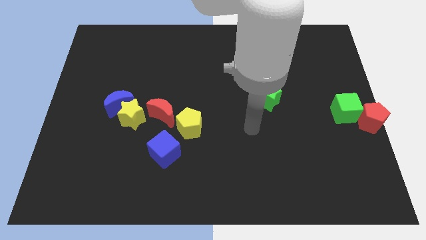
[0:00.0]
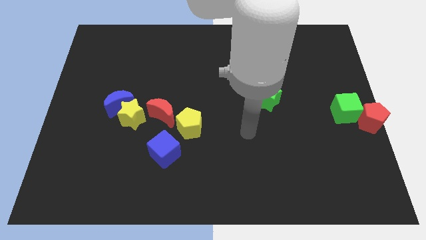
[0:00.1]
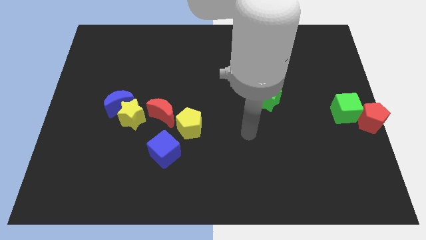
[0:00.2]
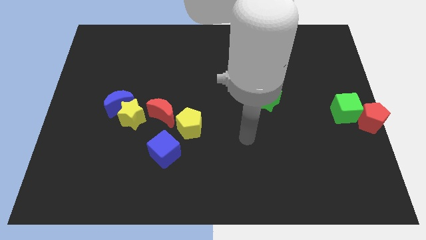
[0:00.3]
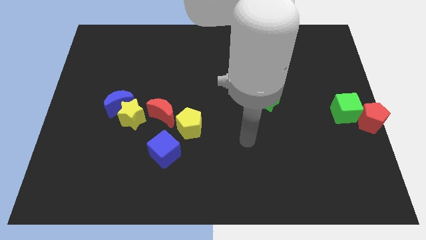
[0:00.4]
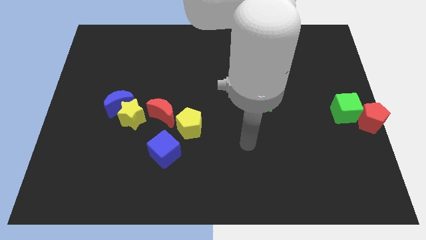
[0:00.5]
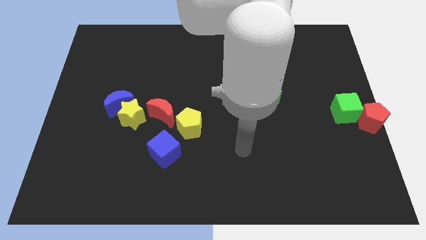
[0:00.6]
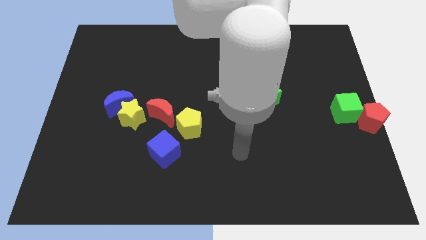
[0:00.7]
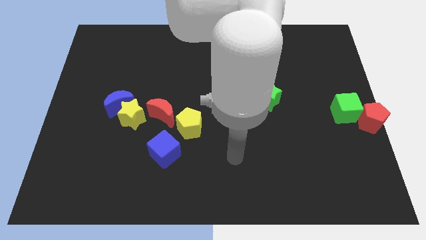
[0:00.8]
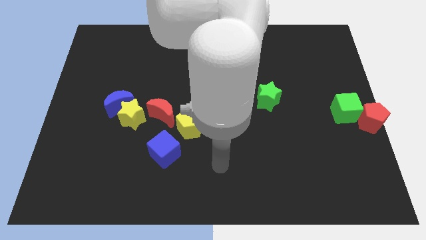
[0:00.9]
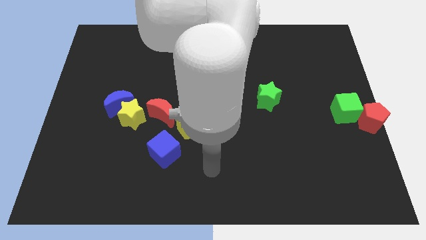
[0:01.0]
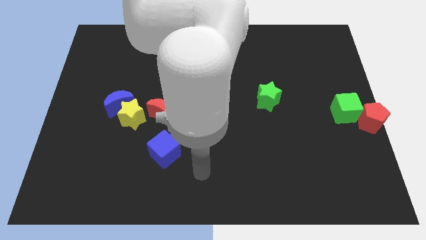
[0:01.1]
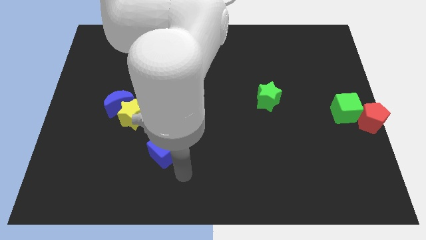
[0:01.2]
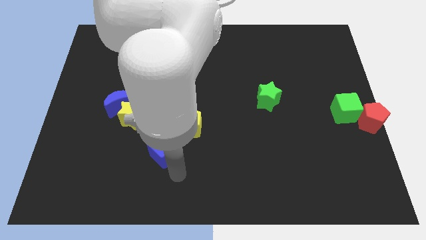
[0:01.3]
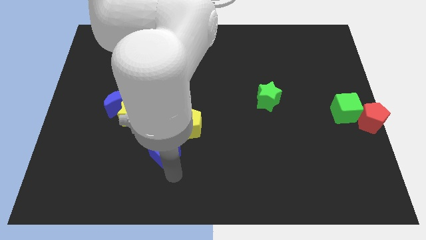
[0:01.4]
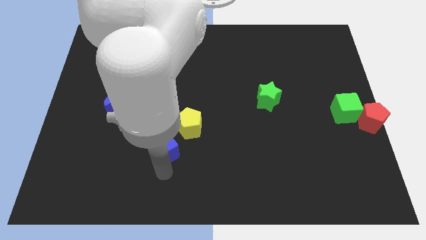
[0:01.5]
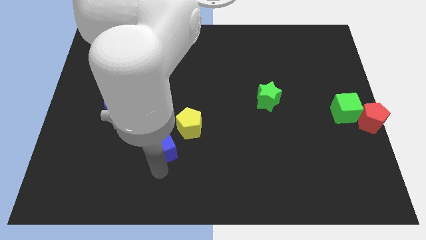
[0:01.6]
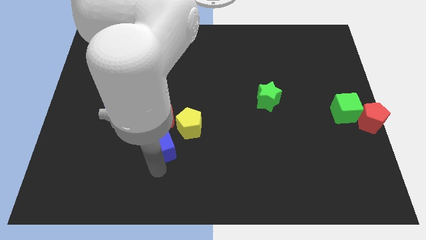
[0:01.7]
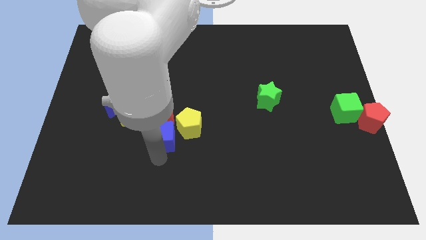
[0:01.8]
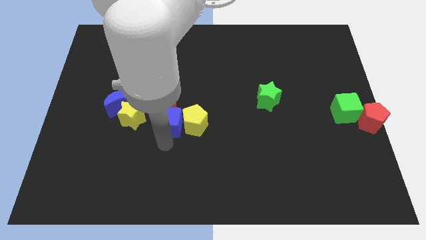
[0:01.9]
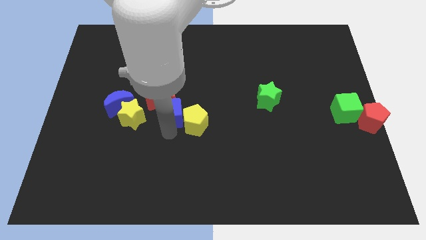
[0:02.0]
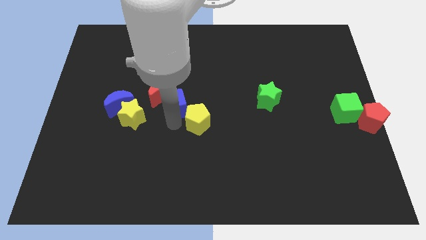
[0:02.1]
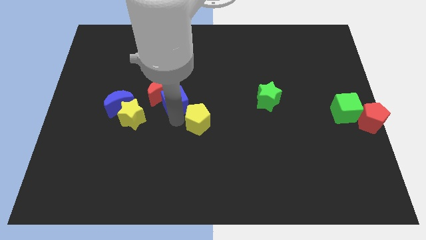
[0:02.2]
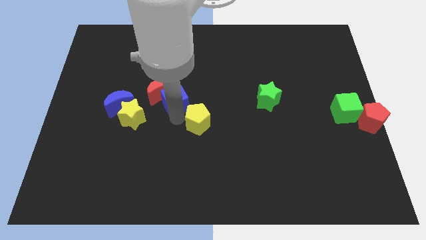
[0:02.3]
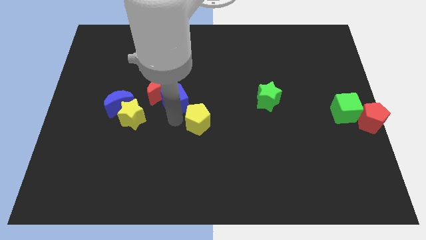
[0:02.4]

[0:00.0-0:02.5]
push the blue cube into the red crescent

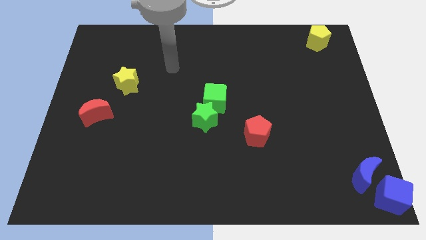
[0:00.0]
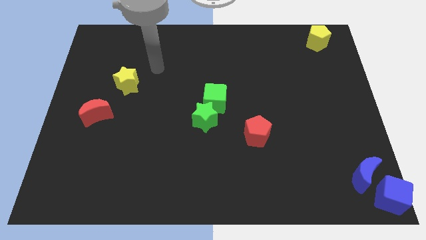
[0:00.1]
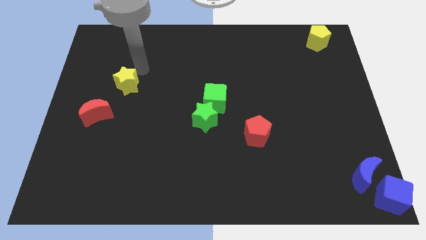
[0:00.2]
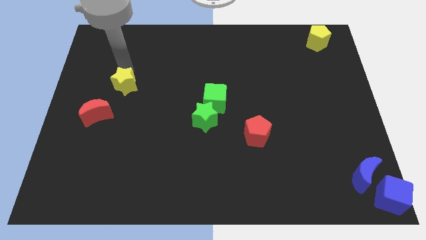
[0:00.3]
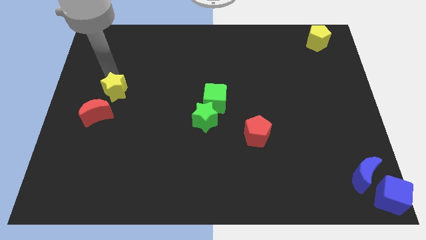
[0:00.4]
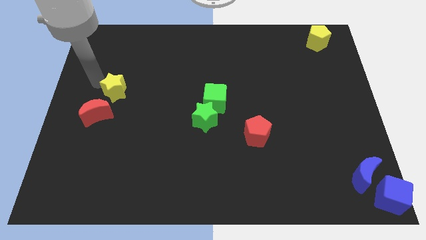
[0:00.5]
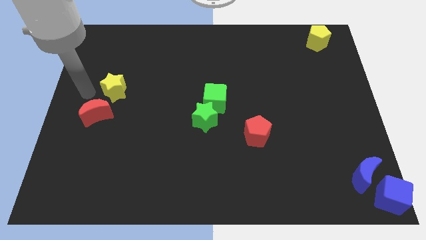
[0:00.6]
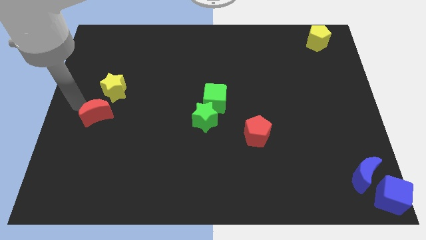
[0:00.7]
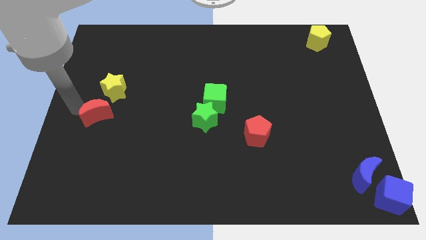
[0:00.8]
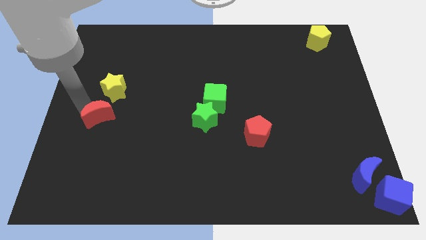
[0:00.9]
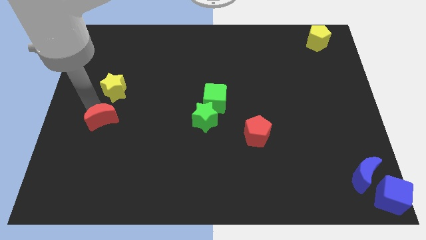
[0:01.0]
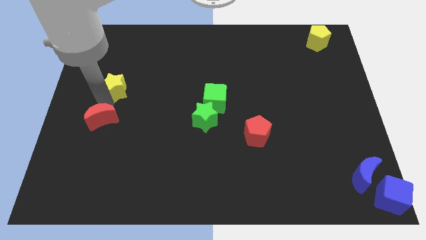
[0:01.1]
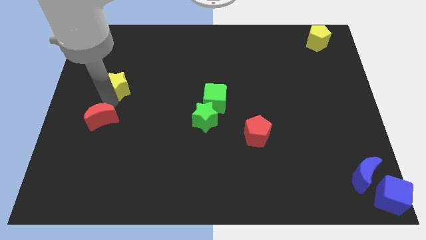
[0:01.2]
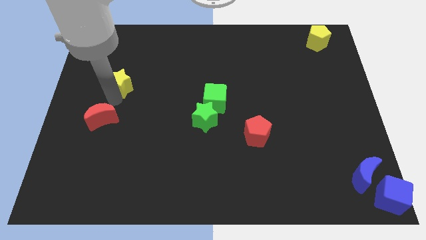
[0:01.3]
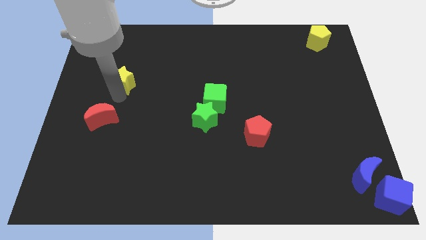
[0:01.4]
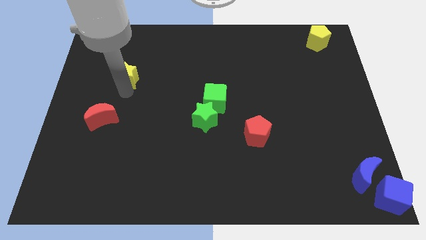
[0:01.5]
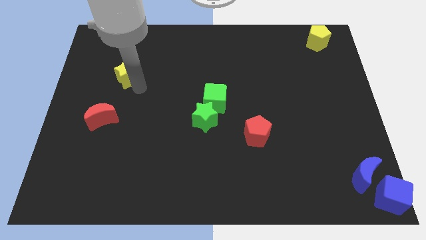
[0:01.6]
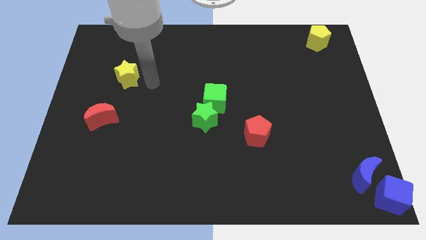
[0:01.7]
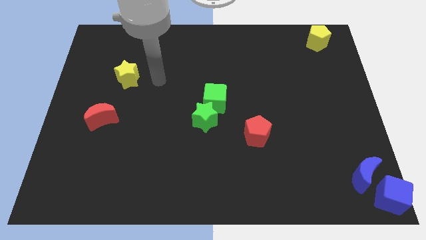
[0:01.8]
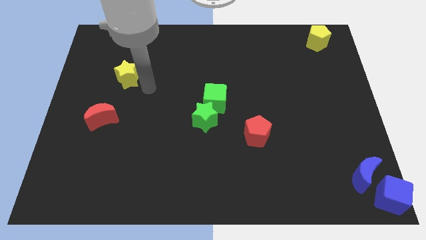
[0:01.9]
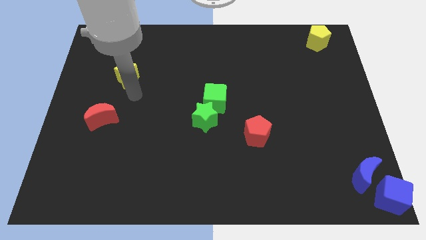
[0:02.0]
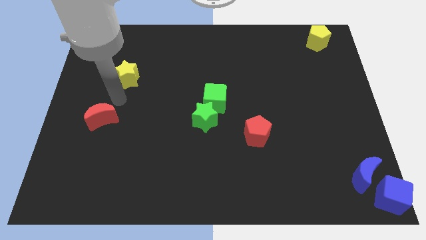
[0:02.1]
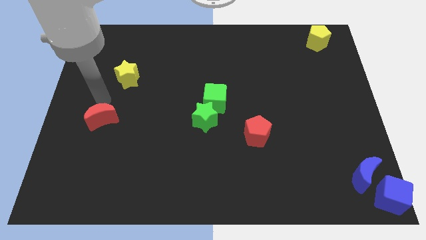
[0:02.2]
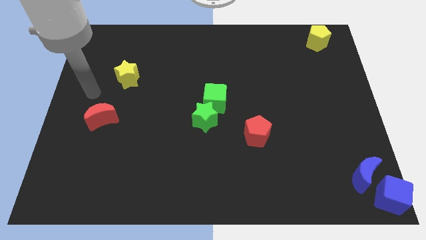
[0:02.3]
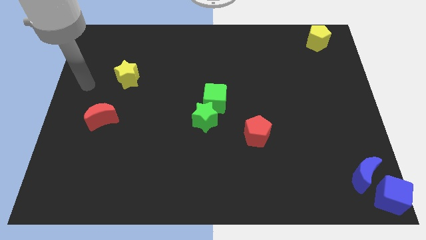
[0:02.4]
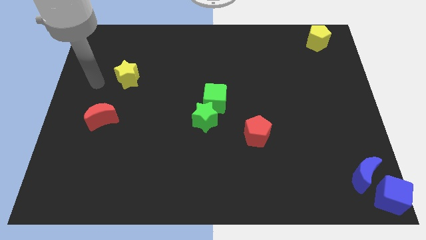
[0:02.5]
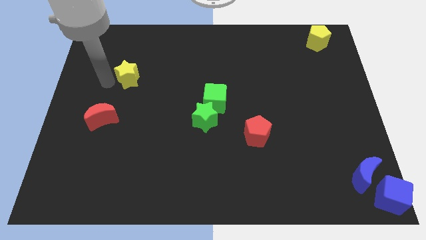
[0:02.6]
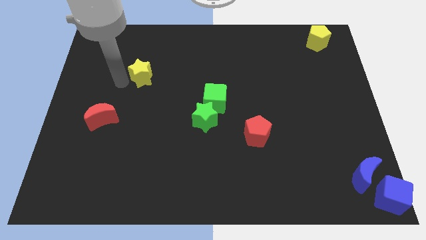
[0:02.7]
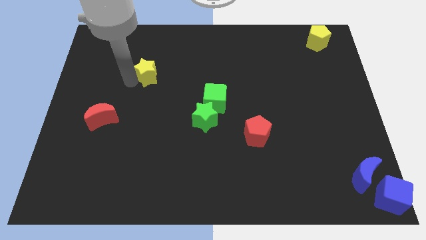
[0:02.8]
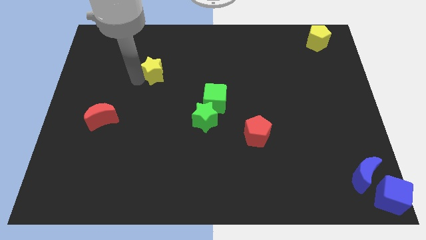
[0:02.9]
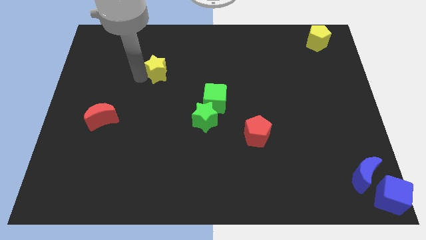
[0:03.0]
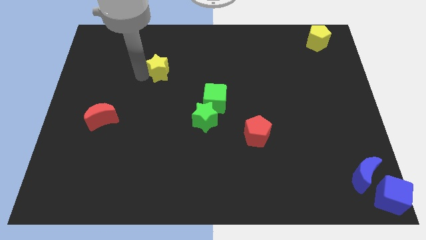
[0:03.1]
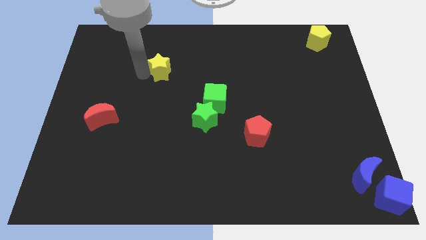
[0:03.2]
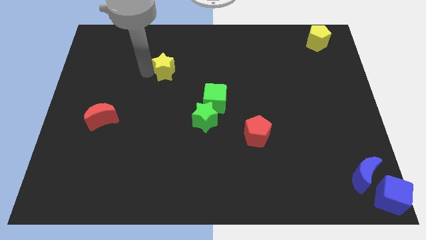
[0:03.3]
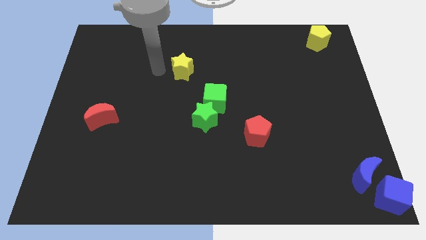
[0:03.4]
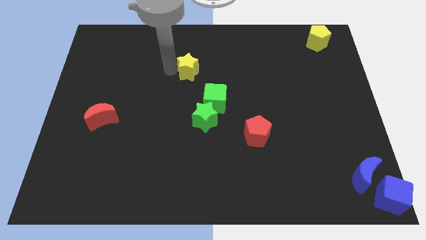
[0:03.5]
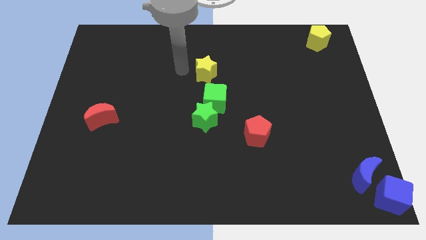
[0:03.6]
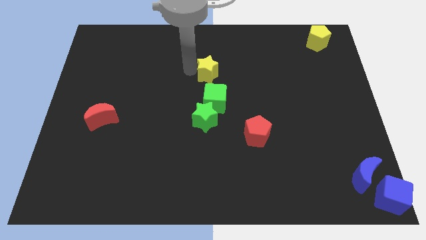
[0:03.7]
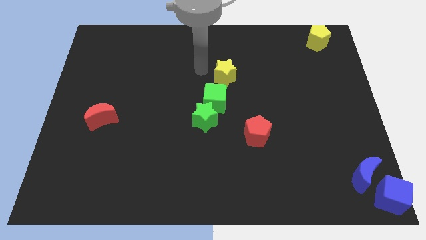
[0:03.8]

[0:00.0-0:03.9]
move yellow star above green cube

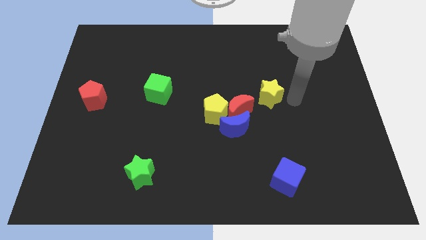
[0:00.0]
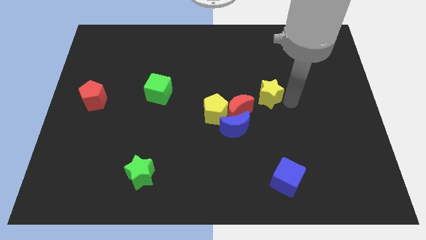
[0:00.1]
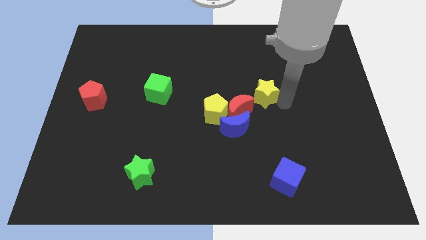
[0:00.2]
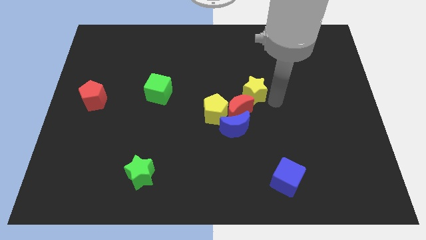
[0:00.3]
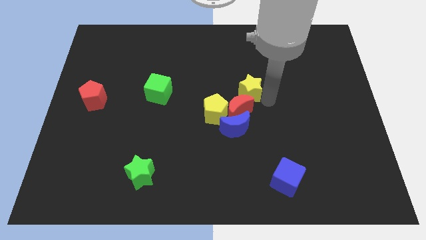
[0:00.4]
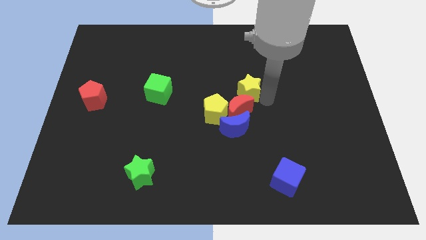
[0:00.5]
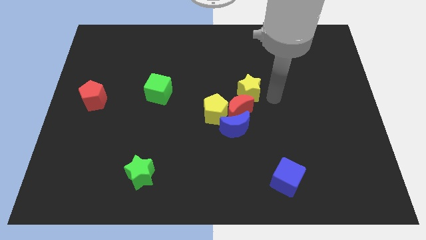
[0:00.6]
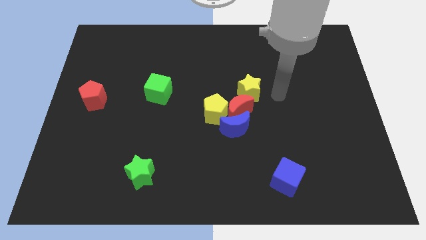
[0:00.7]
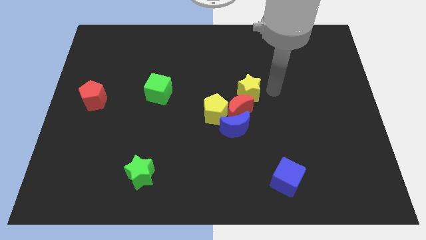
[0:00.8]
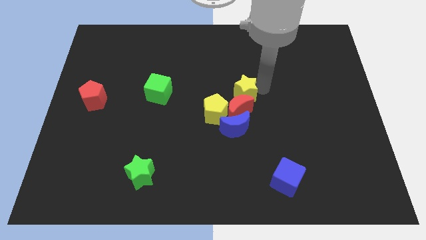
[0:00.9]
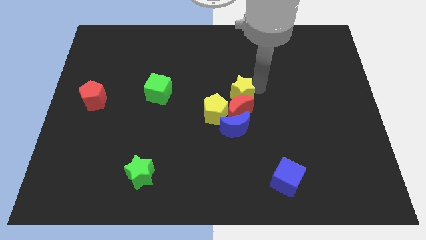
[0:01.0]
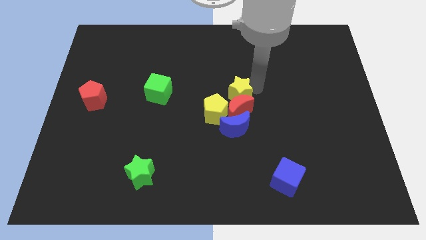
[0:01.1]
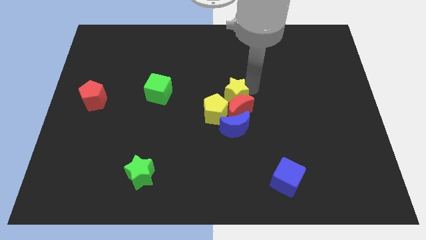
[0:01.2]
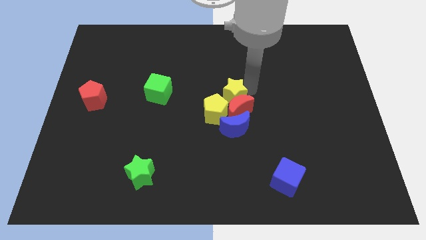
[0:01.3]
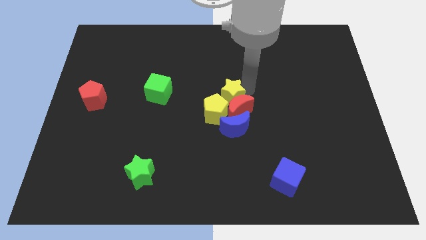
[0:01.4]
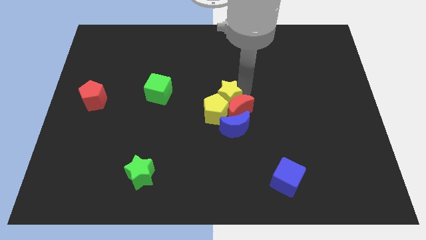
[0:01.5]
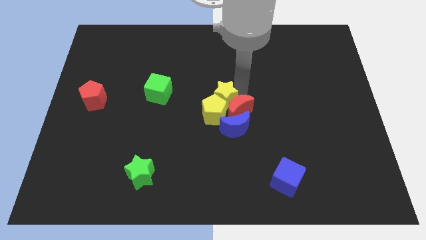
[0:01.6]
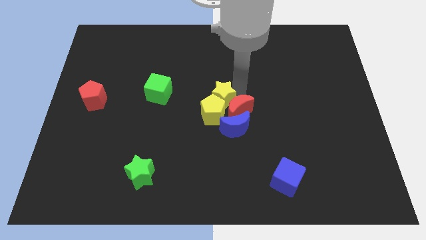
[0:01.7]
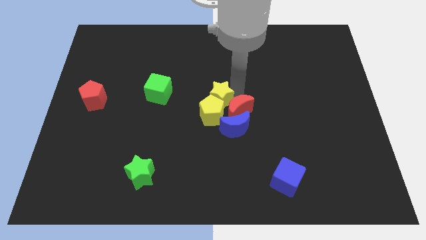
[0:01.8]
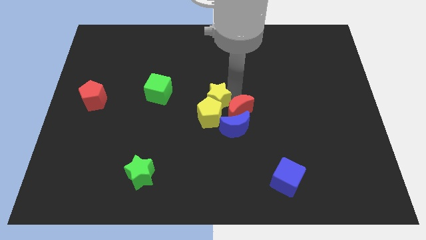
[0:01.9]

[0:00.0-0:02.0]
move the yellow star into the top side of the yellow pentagon

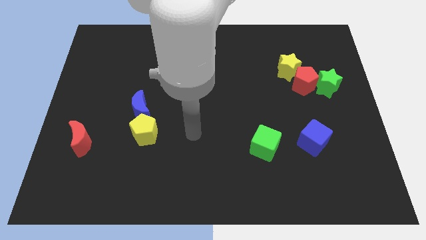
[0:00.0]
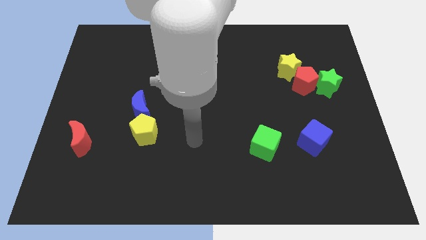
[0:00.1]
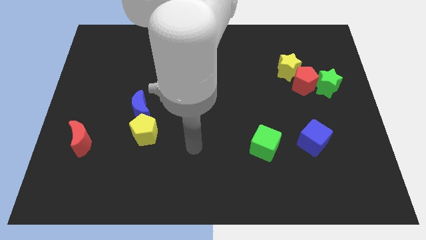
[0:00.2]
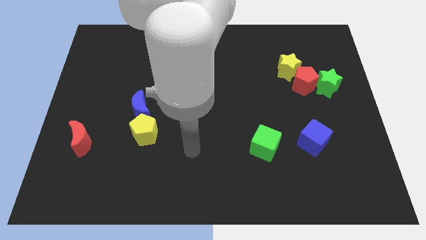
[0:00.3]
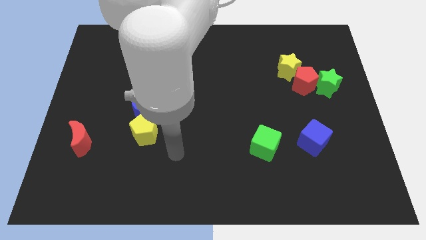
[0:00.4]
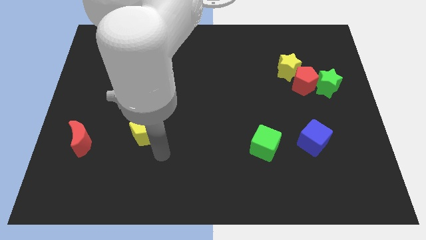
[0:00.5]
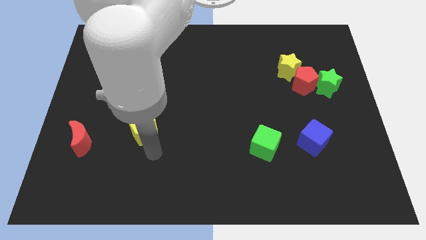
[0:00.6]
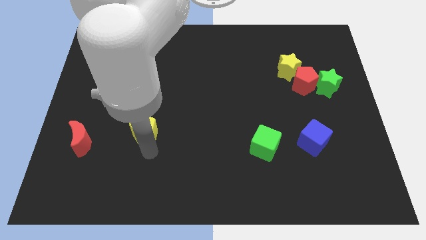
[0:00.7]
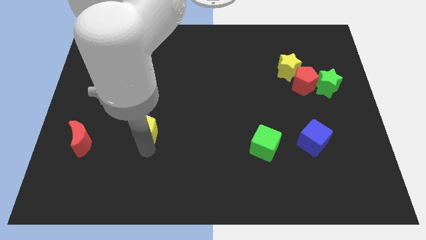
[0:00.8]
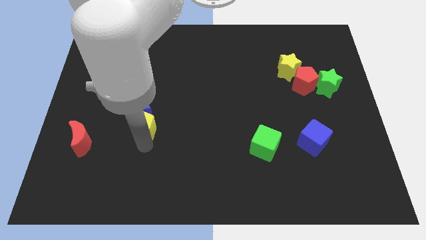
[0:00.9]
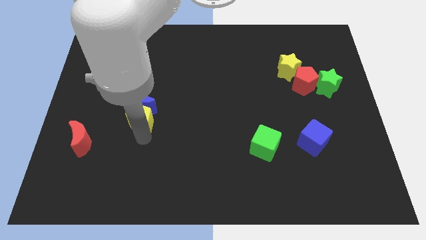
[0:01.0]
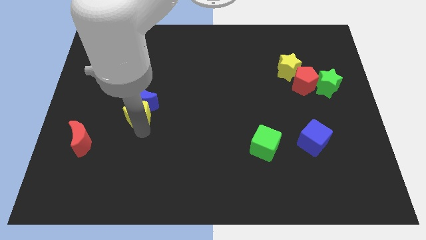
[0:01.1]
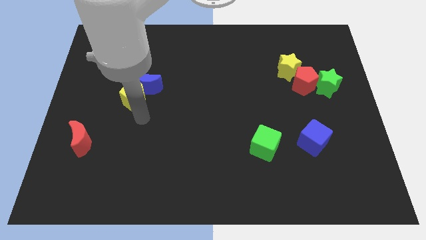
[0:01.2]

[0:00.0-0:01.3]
push the yellow pentagon into the blue moon
